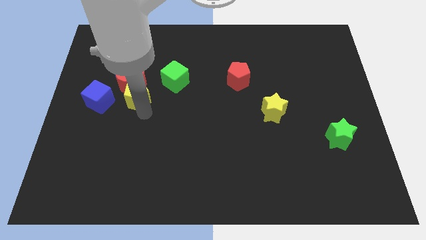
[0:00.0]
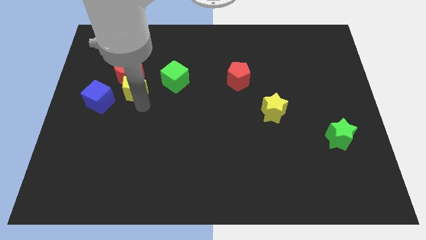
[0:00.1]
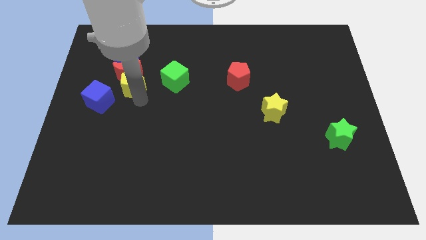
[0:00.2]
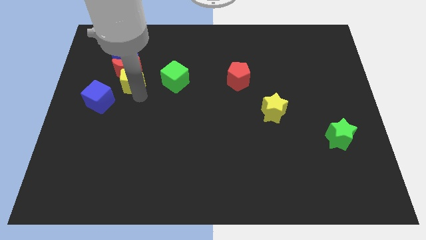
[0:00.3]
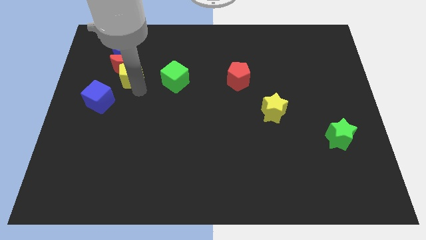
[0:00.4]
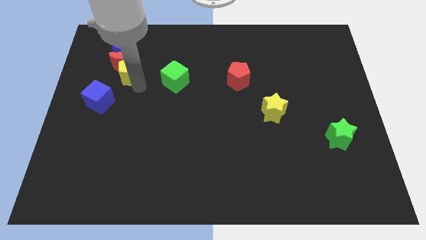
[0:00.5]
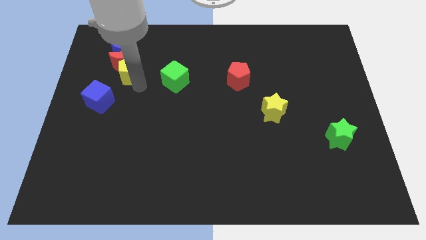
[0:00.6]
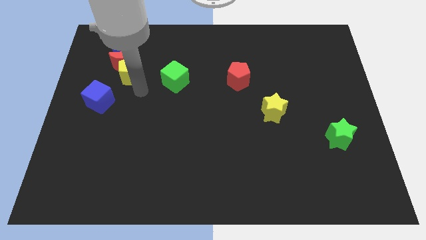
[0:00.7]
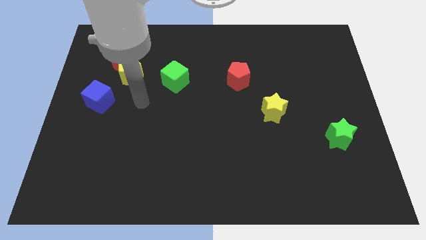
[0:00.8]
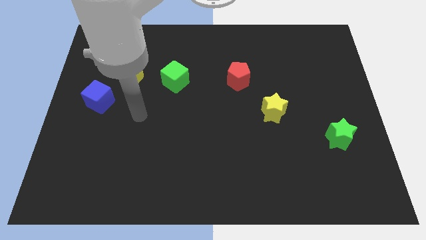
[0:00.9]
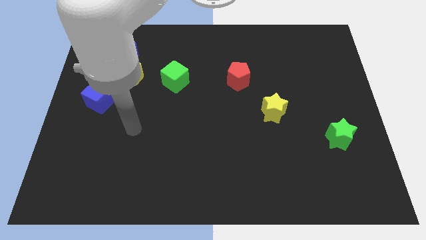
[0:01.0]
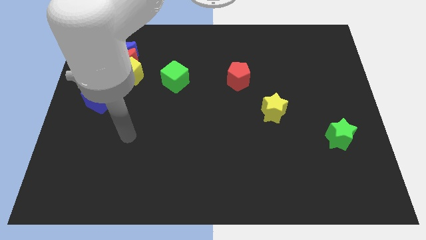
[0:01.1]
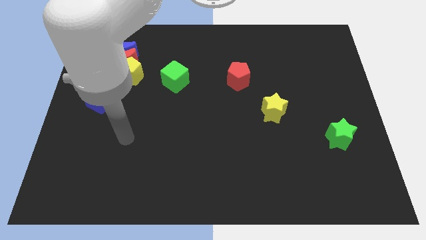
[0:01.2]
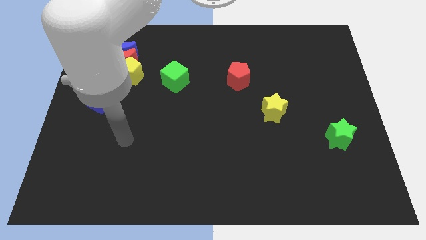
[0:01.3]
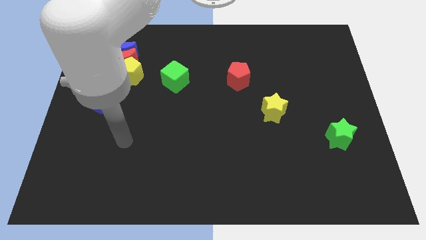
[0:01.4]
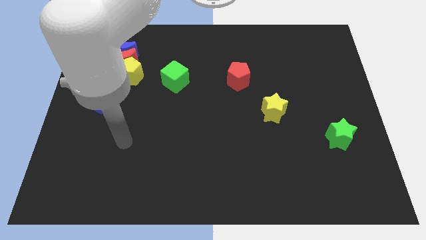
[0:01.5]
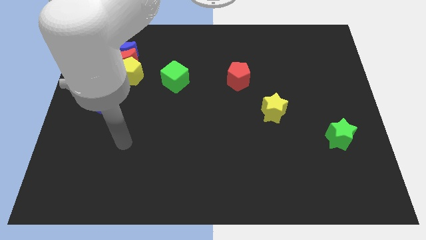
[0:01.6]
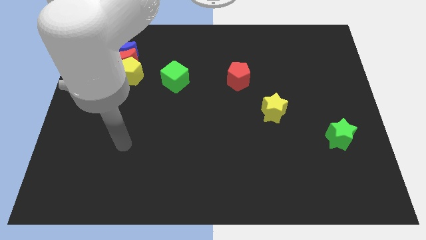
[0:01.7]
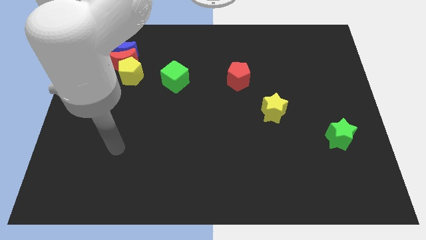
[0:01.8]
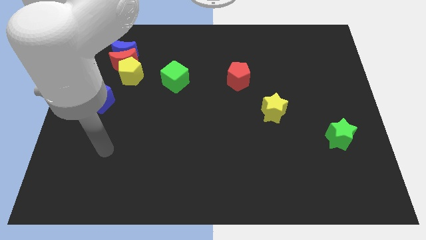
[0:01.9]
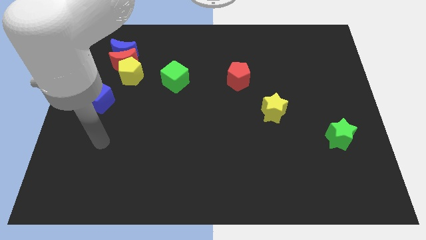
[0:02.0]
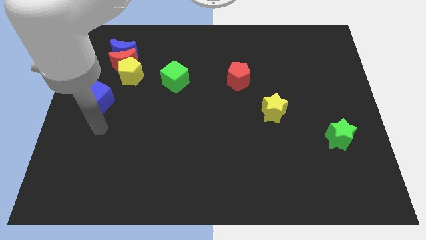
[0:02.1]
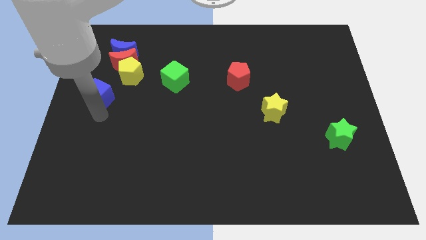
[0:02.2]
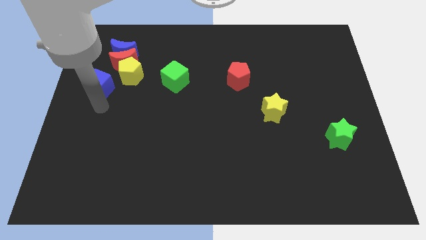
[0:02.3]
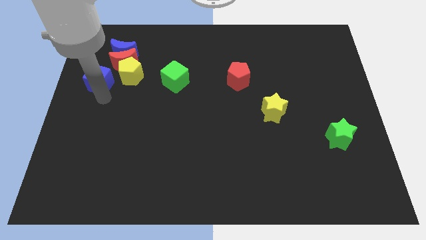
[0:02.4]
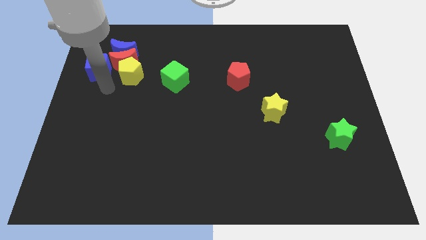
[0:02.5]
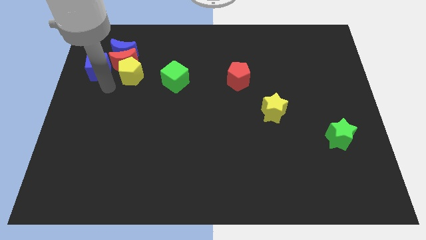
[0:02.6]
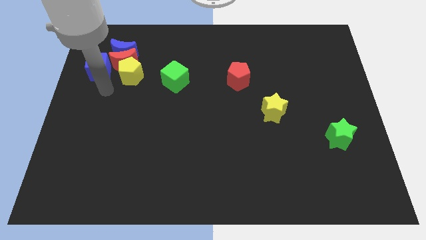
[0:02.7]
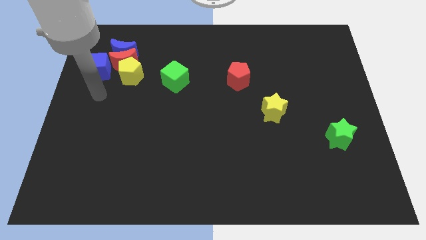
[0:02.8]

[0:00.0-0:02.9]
push the yellow pentagon red crescent and blue crescent towards top left

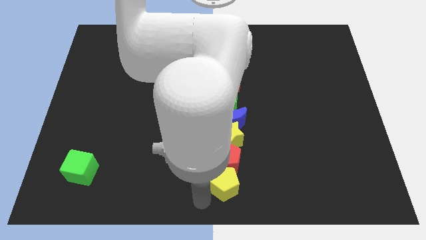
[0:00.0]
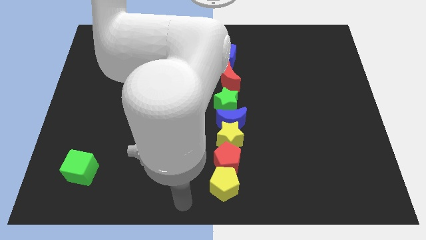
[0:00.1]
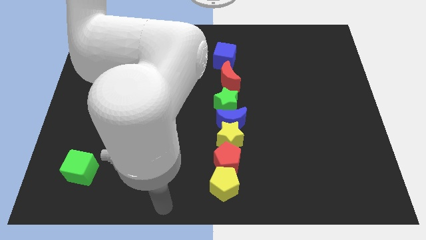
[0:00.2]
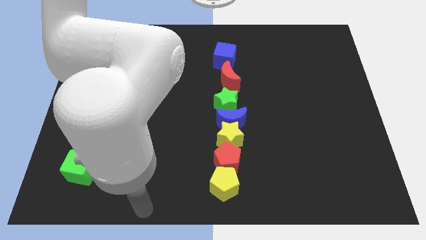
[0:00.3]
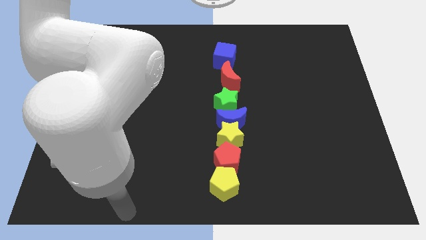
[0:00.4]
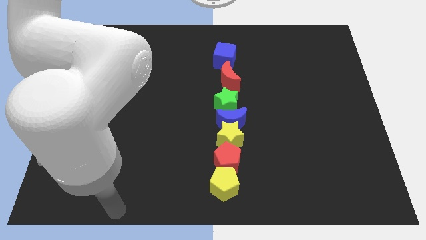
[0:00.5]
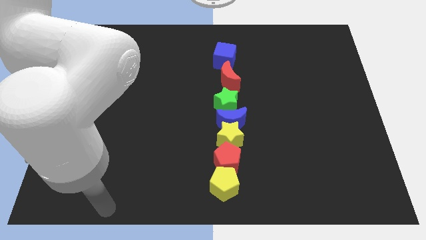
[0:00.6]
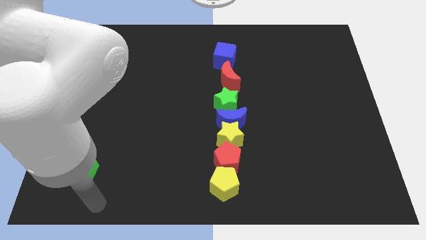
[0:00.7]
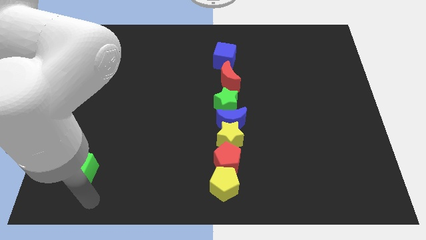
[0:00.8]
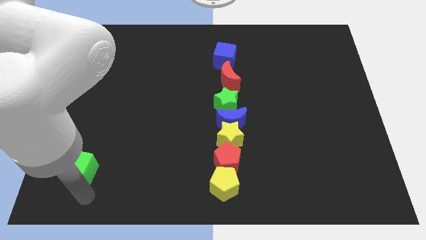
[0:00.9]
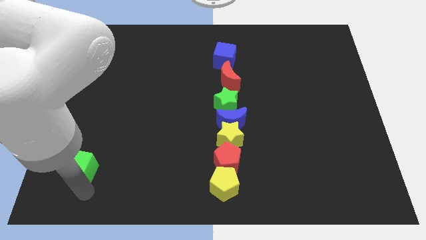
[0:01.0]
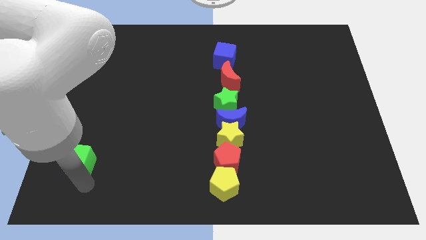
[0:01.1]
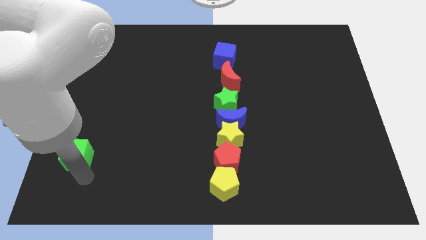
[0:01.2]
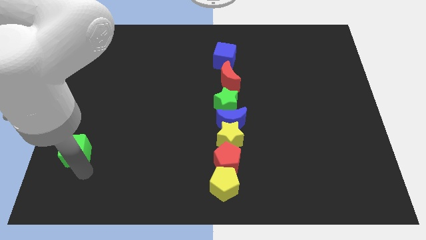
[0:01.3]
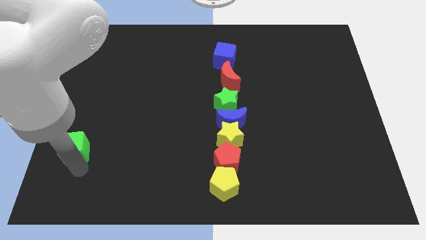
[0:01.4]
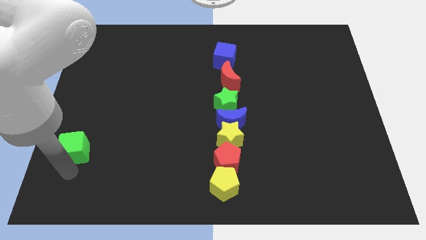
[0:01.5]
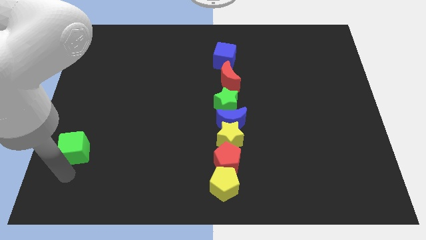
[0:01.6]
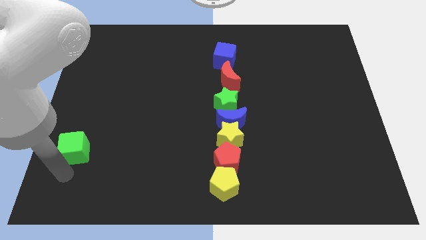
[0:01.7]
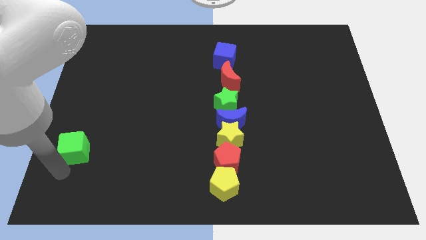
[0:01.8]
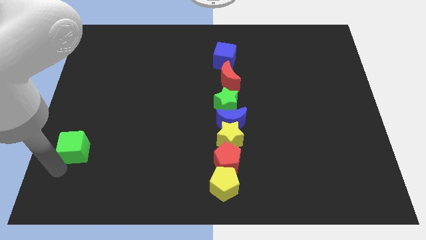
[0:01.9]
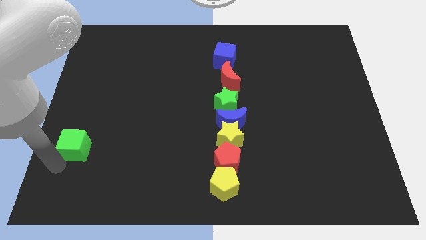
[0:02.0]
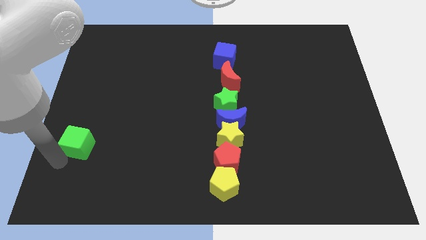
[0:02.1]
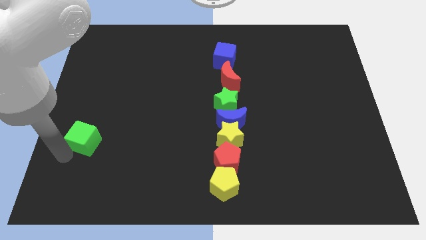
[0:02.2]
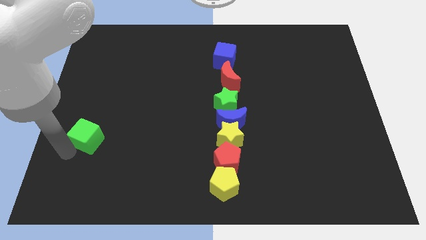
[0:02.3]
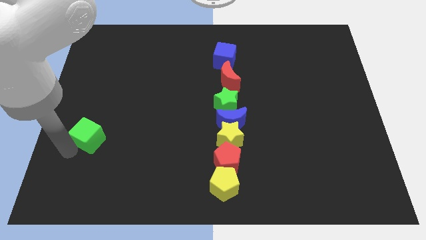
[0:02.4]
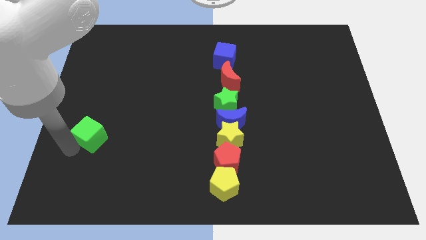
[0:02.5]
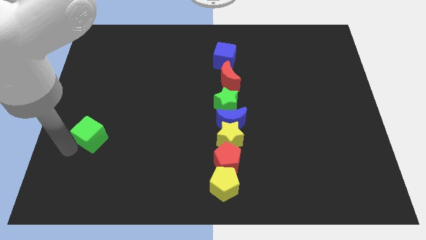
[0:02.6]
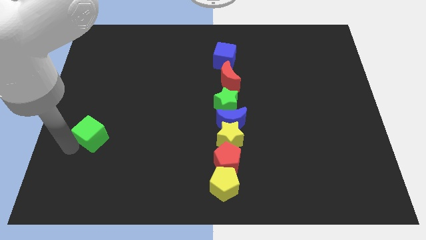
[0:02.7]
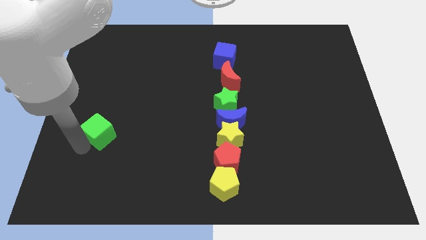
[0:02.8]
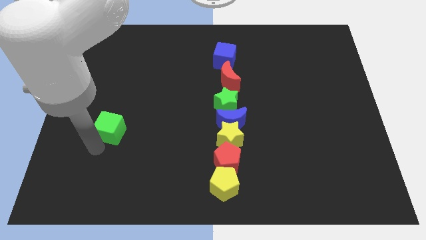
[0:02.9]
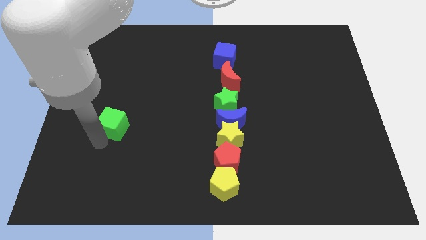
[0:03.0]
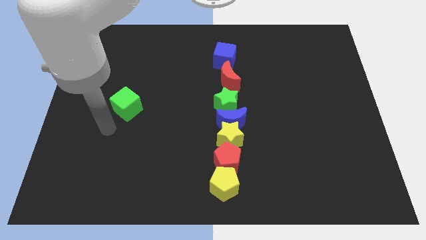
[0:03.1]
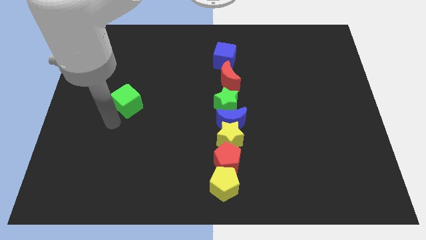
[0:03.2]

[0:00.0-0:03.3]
place the green cube parallel to green star

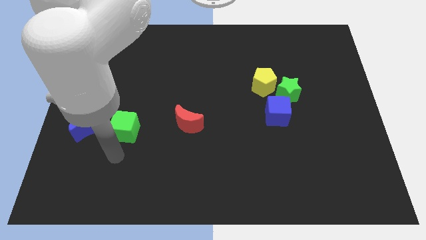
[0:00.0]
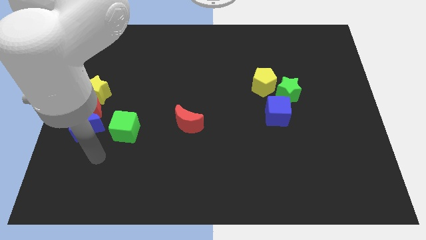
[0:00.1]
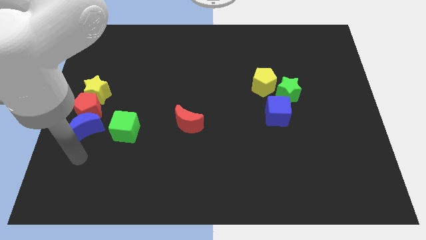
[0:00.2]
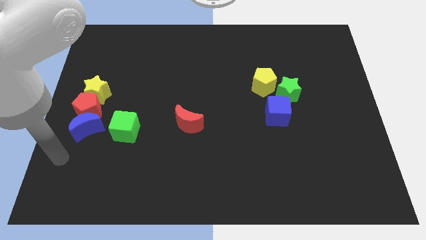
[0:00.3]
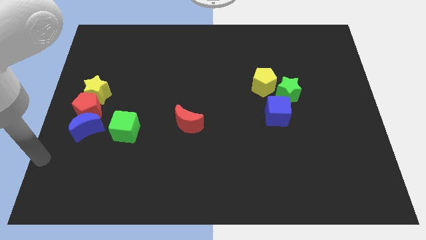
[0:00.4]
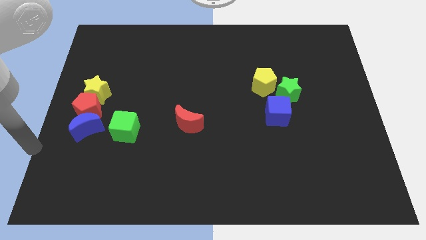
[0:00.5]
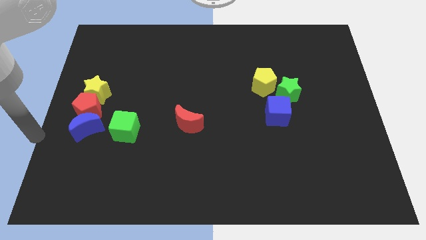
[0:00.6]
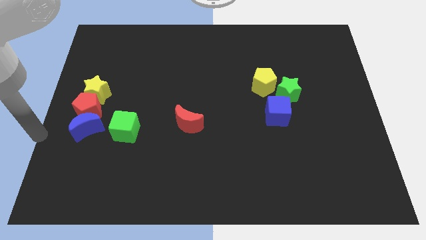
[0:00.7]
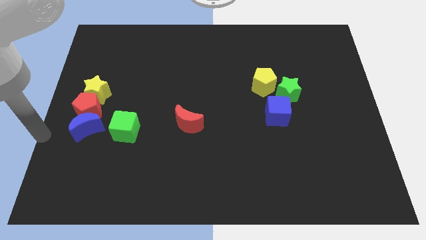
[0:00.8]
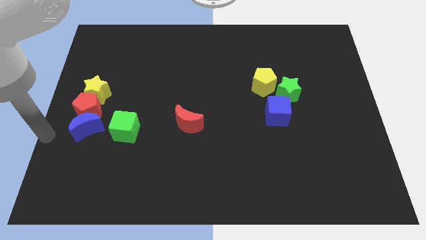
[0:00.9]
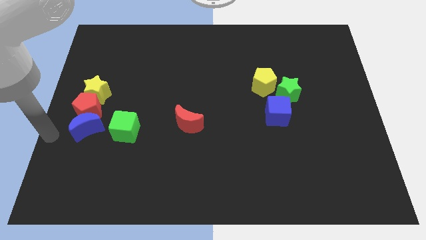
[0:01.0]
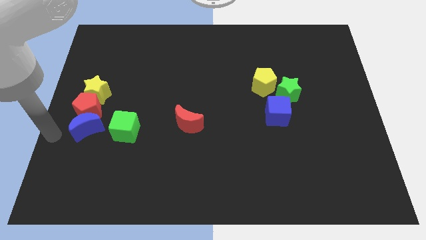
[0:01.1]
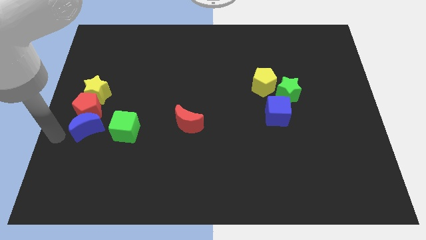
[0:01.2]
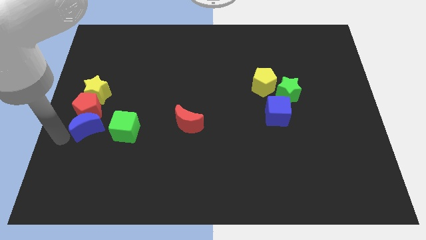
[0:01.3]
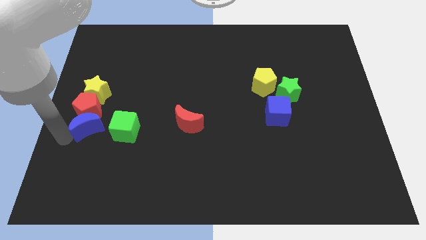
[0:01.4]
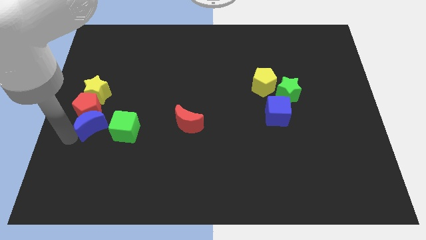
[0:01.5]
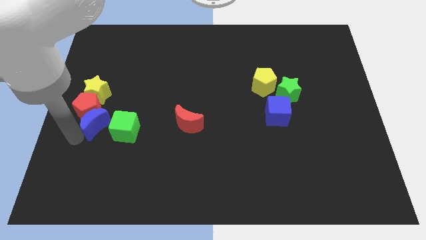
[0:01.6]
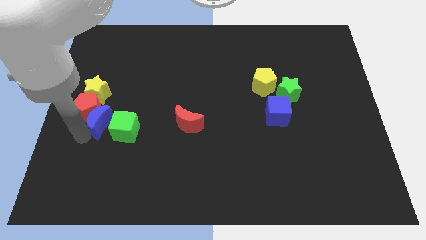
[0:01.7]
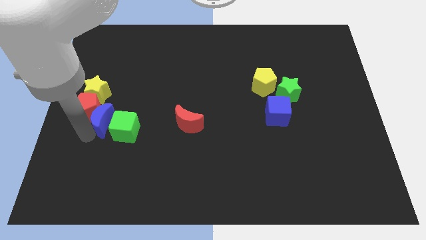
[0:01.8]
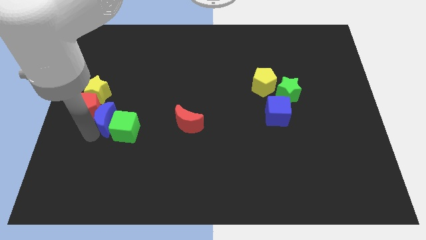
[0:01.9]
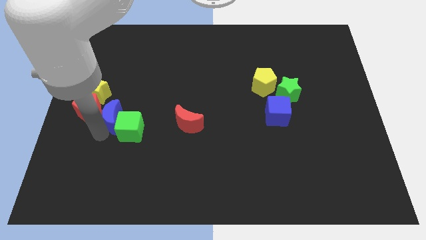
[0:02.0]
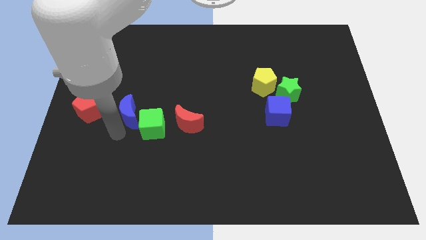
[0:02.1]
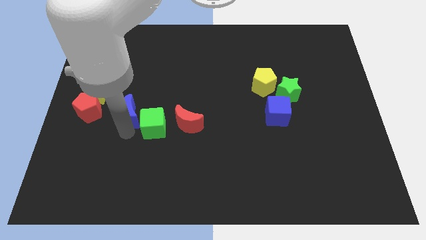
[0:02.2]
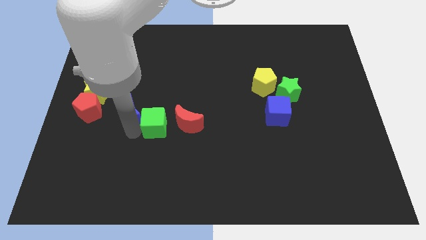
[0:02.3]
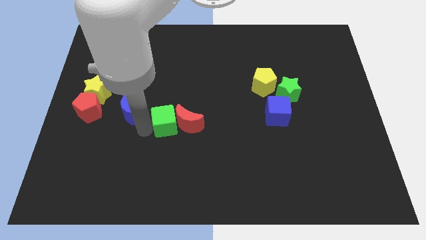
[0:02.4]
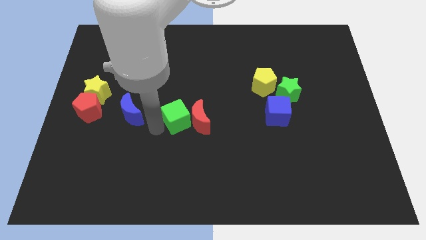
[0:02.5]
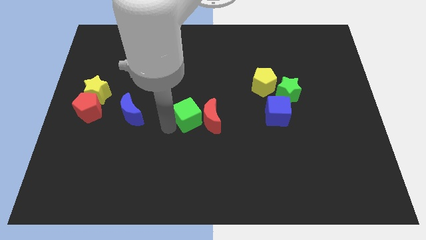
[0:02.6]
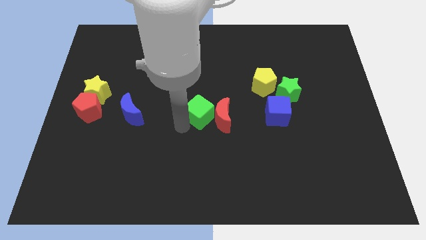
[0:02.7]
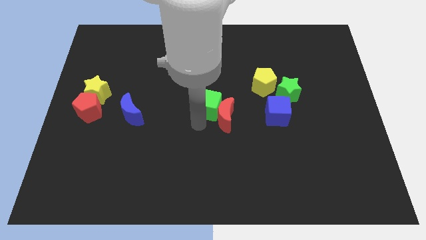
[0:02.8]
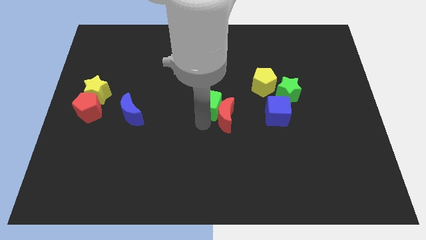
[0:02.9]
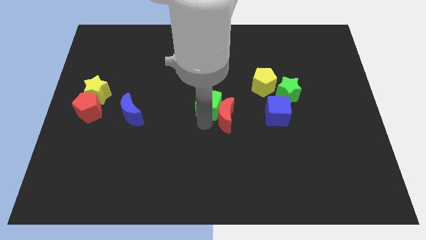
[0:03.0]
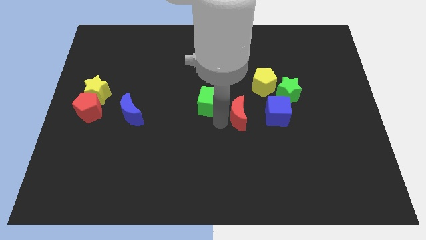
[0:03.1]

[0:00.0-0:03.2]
place the green cube and red moon at the center of the board
